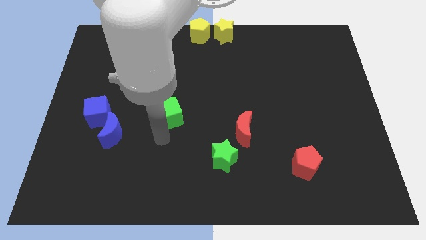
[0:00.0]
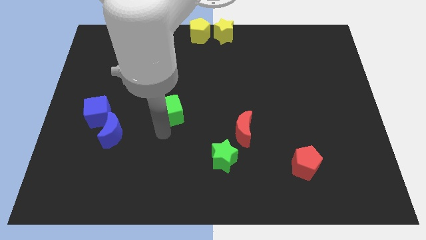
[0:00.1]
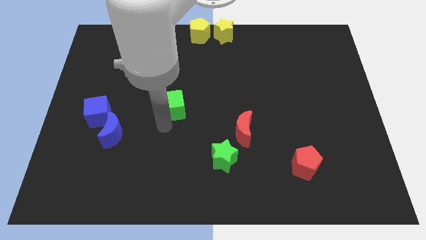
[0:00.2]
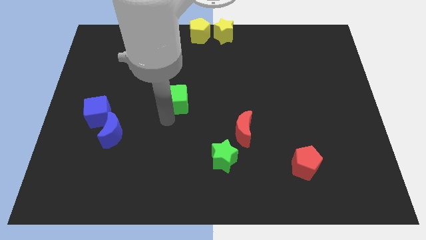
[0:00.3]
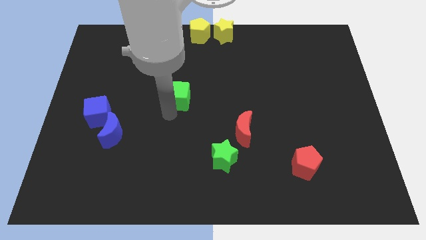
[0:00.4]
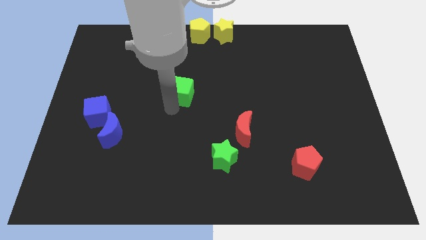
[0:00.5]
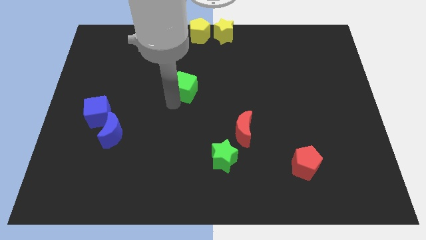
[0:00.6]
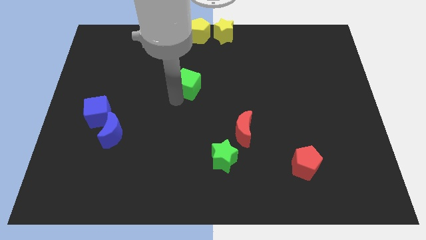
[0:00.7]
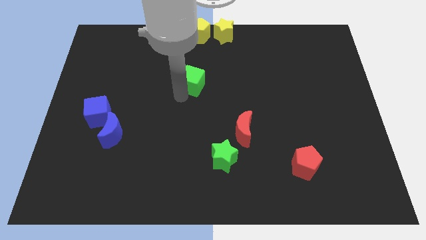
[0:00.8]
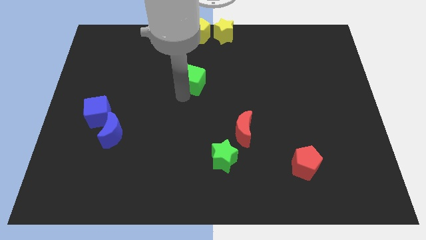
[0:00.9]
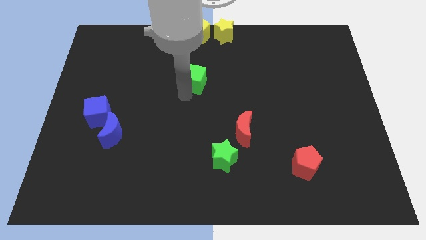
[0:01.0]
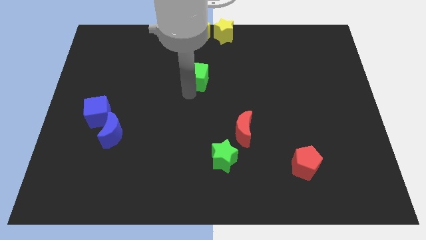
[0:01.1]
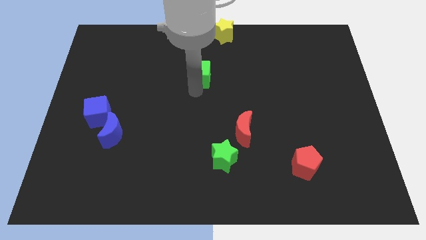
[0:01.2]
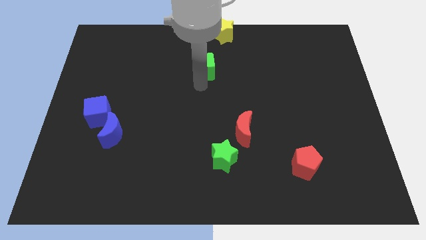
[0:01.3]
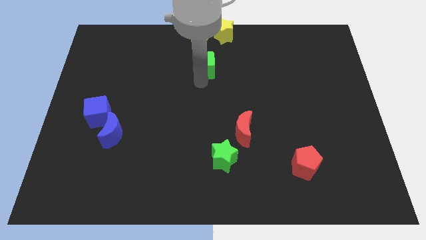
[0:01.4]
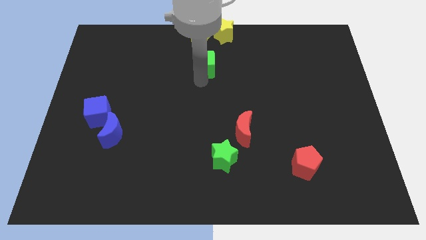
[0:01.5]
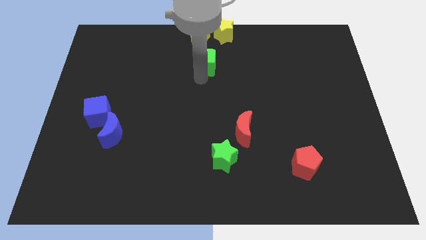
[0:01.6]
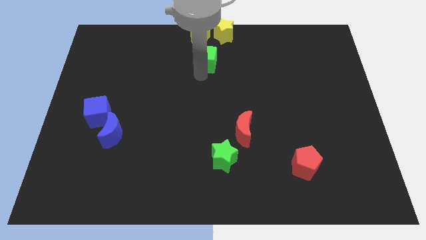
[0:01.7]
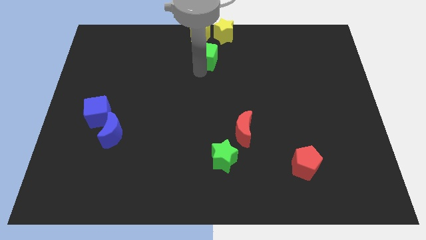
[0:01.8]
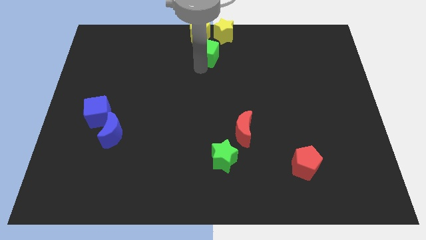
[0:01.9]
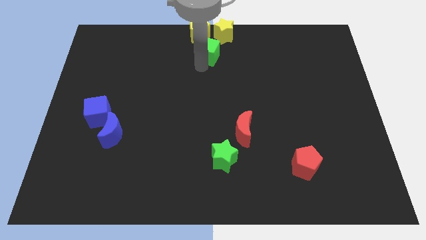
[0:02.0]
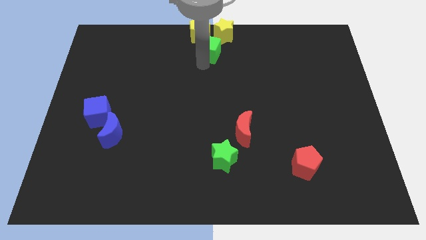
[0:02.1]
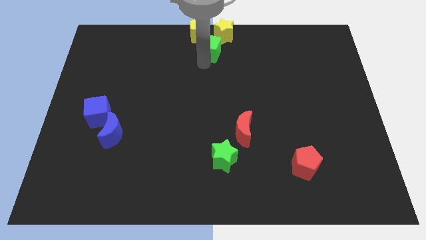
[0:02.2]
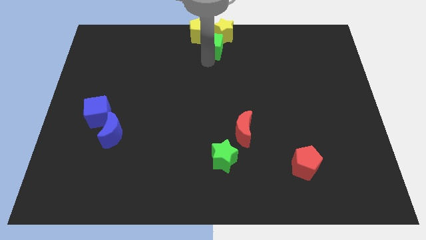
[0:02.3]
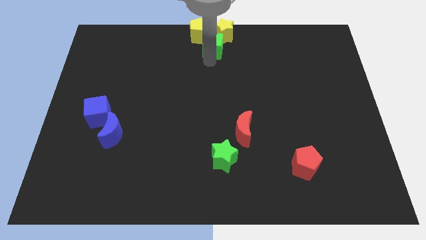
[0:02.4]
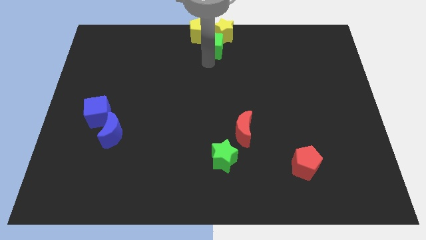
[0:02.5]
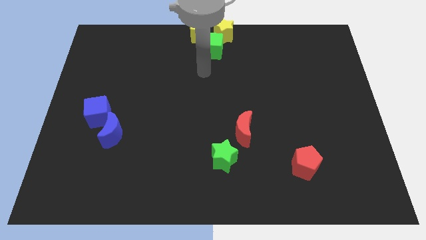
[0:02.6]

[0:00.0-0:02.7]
push the green cube to the bottom of the yellow star and yellow pentagon

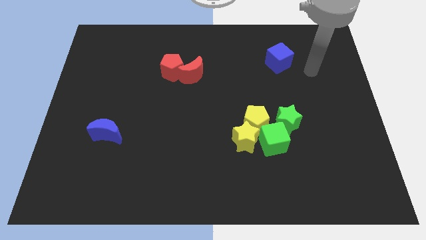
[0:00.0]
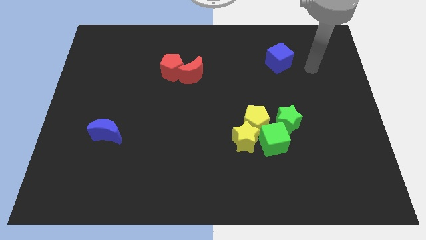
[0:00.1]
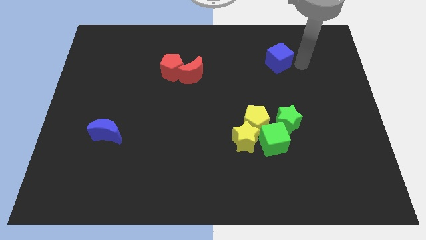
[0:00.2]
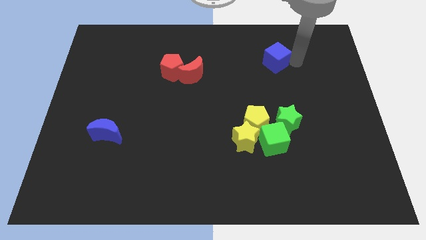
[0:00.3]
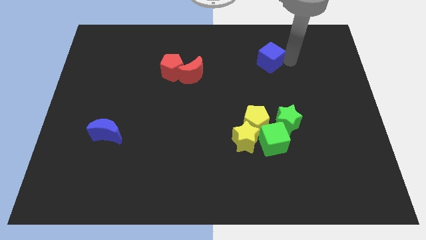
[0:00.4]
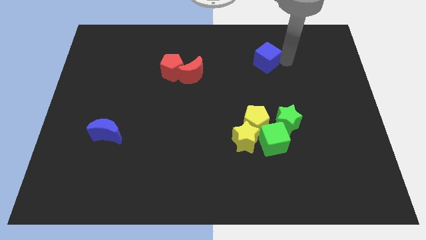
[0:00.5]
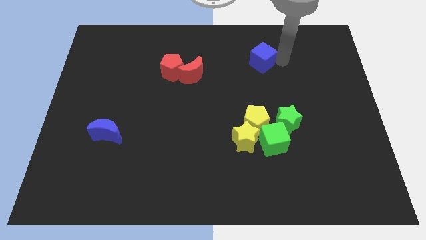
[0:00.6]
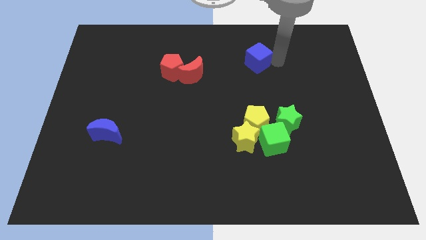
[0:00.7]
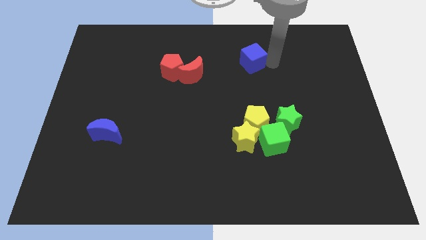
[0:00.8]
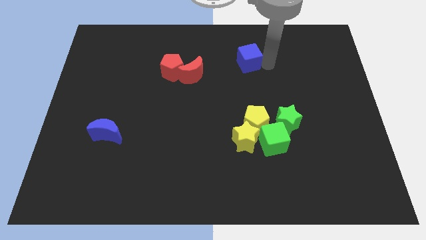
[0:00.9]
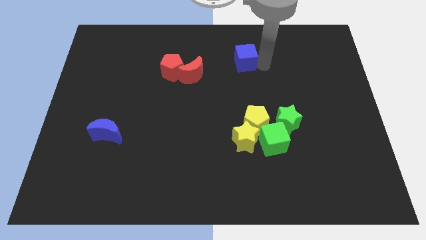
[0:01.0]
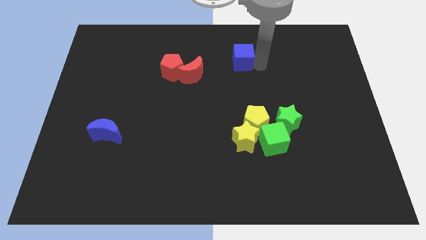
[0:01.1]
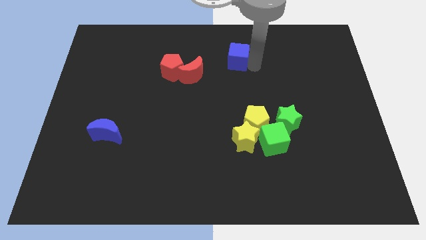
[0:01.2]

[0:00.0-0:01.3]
move the blue cube to the left of the board

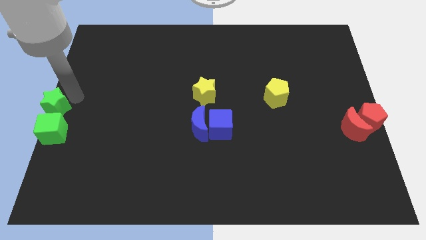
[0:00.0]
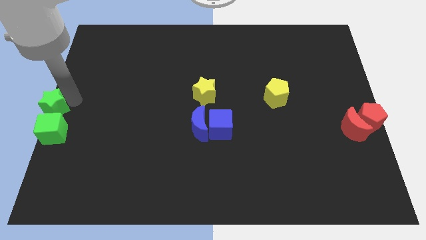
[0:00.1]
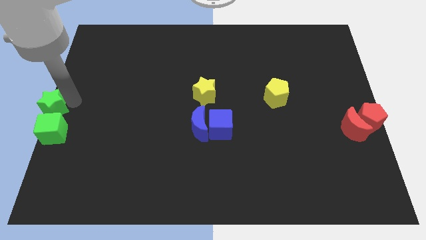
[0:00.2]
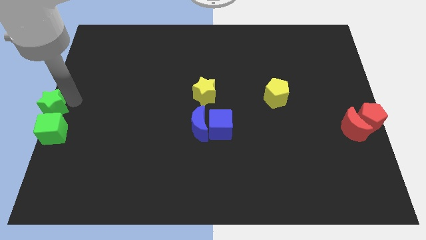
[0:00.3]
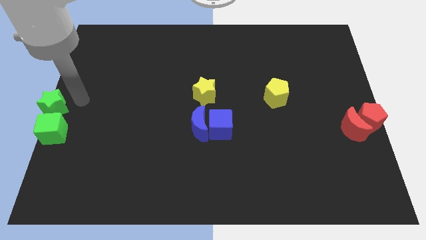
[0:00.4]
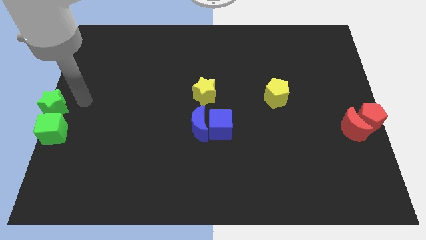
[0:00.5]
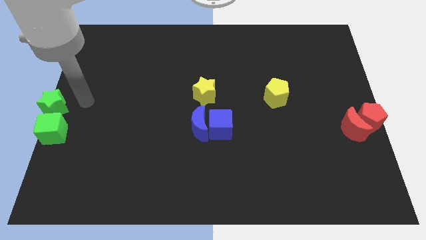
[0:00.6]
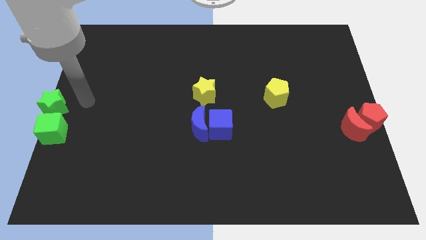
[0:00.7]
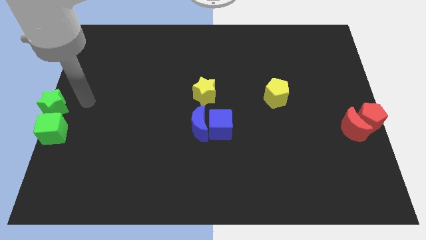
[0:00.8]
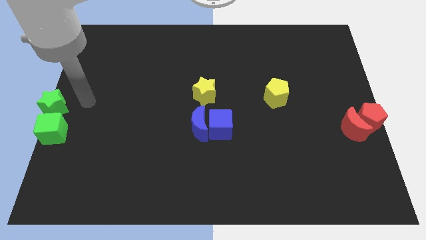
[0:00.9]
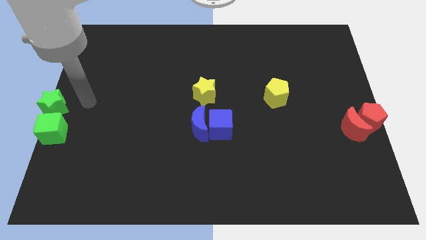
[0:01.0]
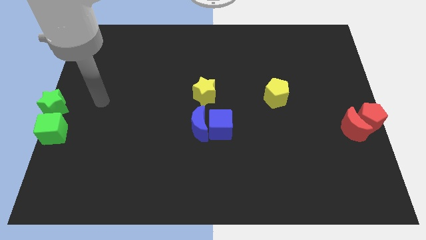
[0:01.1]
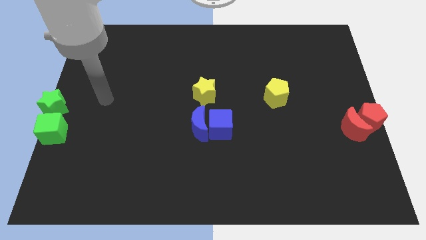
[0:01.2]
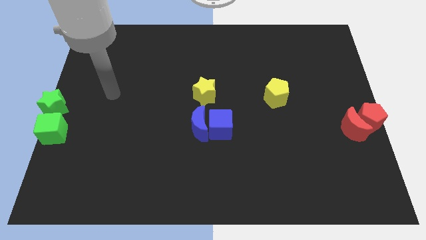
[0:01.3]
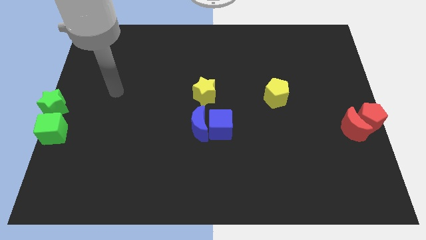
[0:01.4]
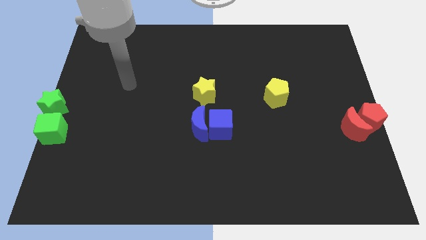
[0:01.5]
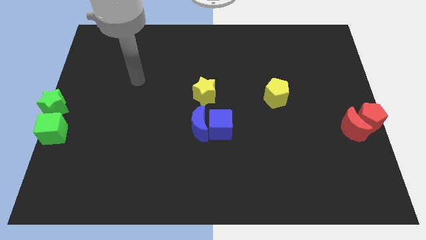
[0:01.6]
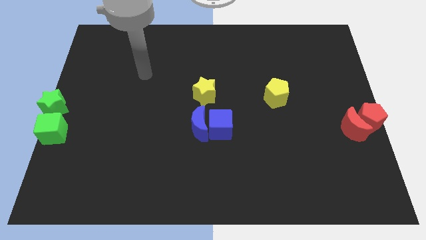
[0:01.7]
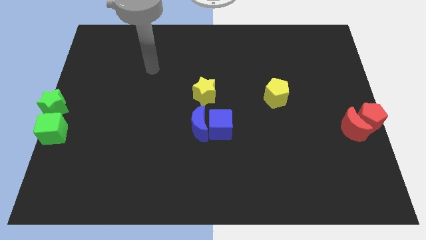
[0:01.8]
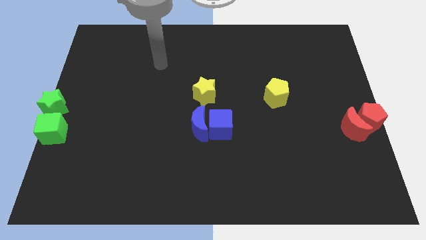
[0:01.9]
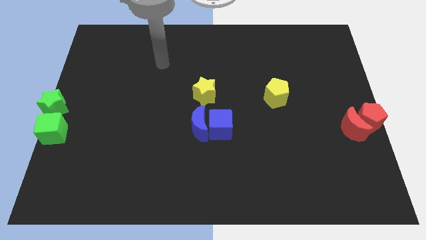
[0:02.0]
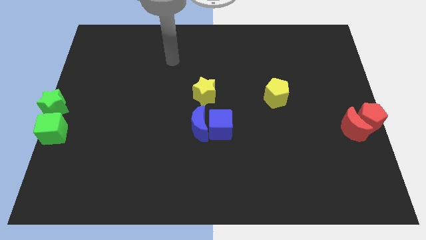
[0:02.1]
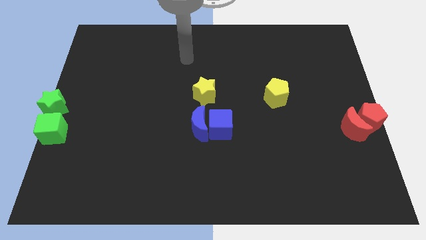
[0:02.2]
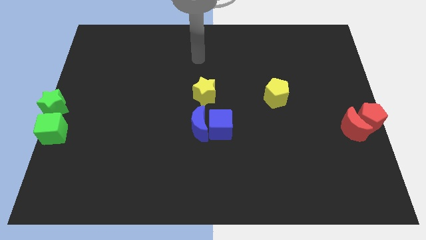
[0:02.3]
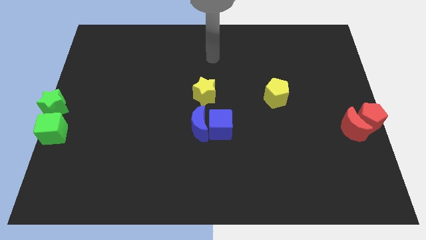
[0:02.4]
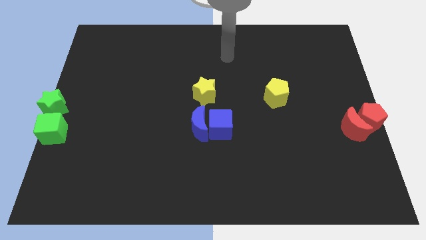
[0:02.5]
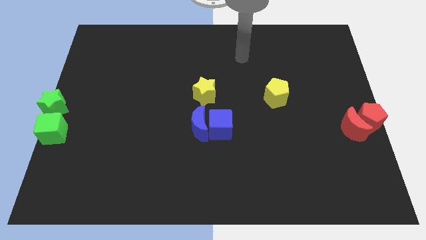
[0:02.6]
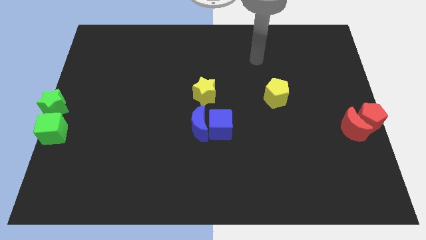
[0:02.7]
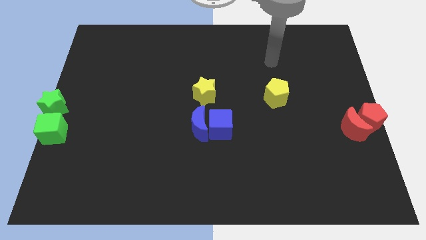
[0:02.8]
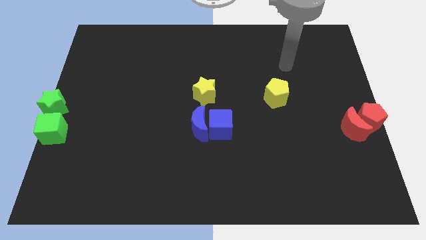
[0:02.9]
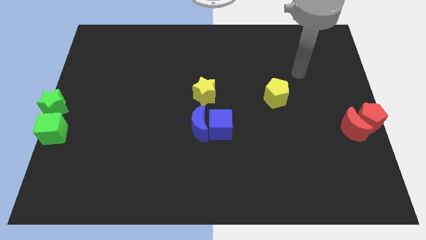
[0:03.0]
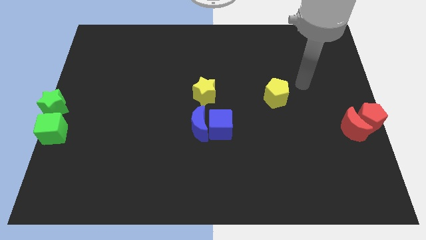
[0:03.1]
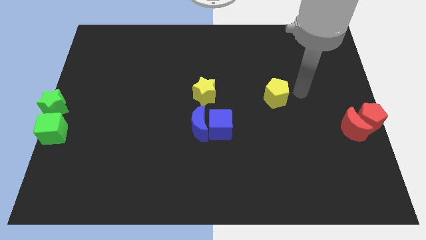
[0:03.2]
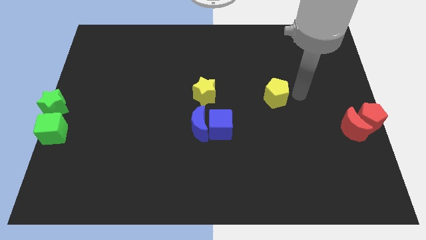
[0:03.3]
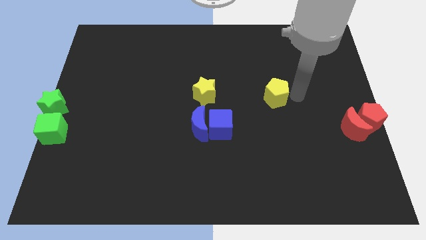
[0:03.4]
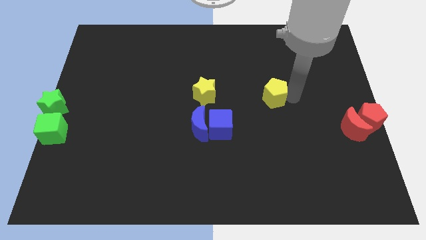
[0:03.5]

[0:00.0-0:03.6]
move your arm to the right side of the yellow pentagon

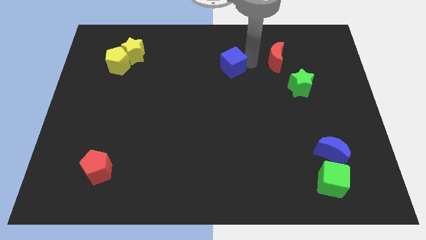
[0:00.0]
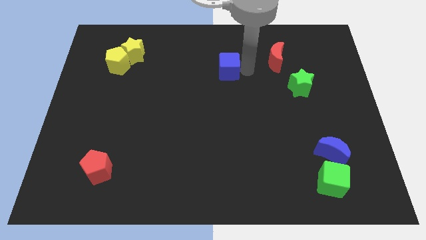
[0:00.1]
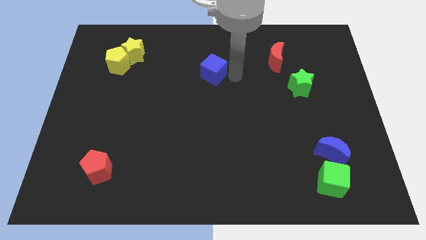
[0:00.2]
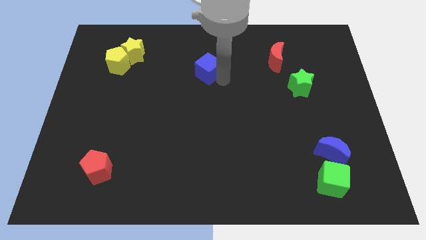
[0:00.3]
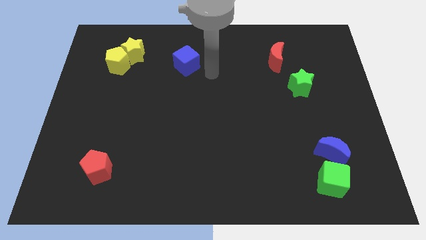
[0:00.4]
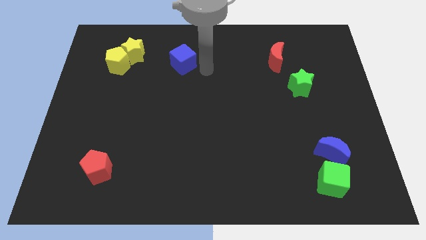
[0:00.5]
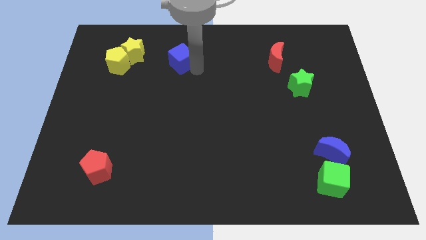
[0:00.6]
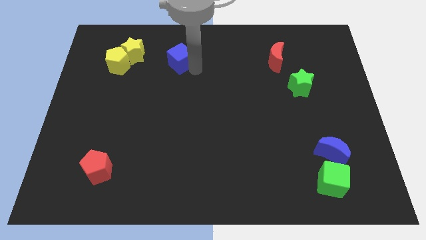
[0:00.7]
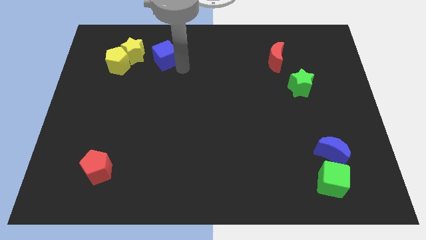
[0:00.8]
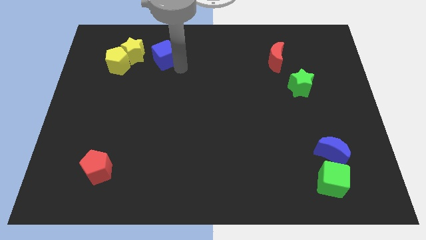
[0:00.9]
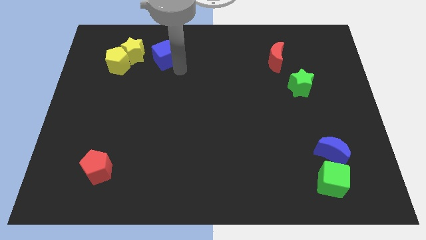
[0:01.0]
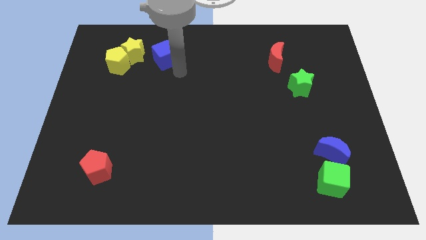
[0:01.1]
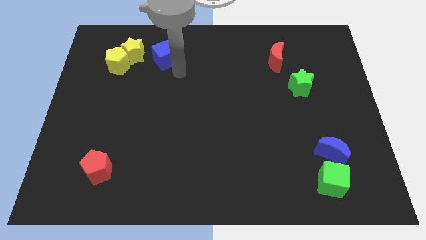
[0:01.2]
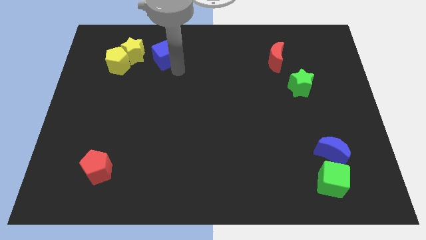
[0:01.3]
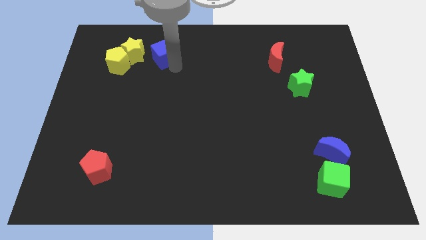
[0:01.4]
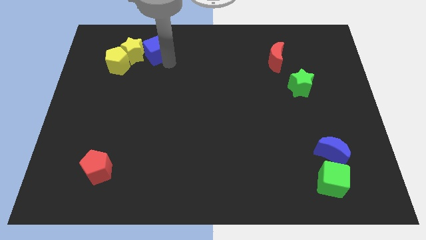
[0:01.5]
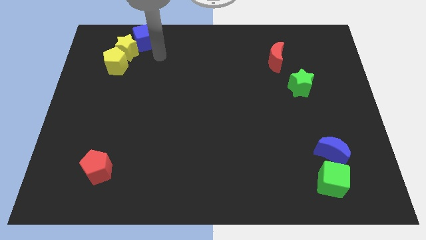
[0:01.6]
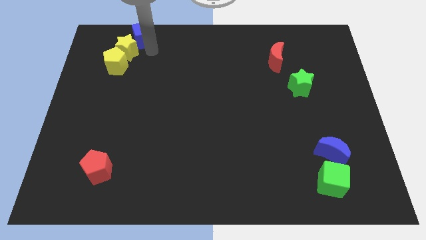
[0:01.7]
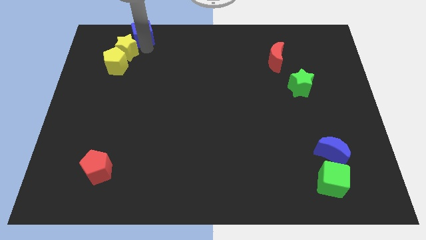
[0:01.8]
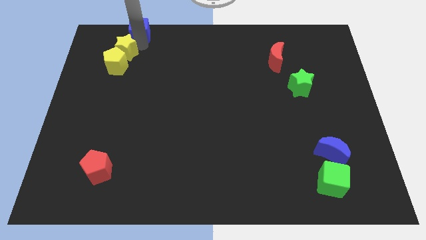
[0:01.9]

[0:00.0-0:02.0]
place the blue cube towards the top of the yellow star
